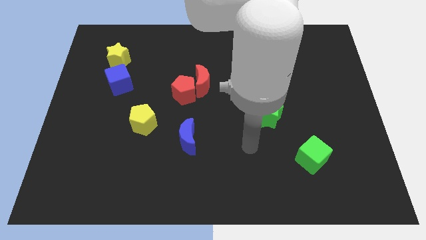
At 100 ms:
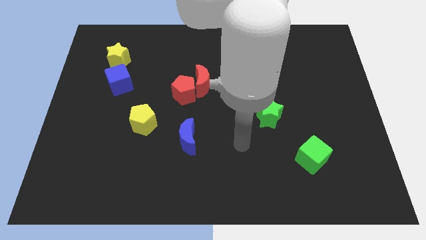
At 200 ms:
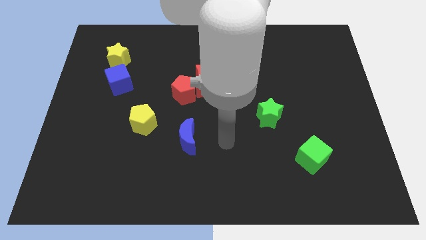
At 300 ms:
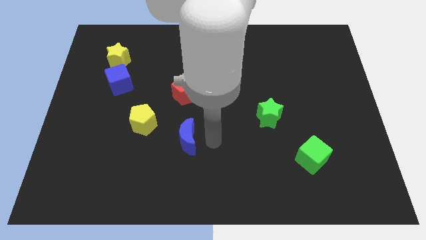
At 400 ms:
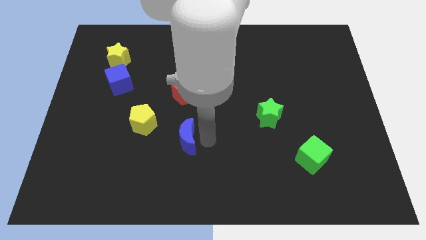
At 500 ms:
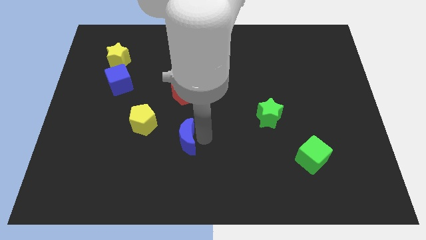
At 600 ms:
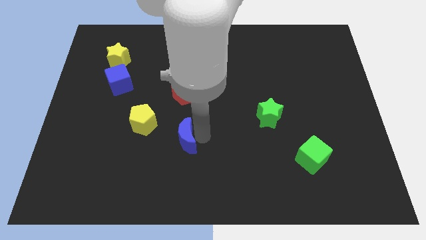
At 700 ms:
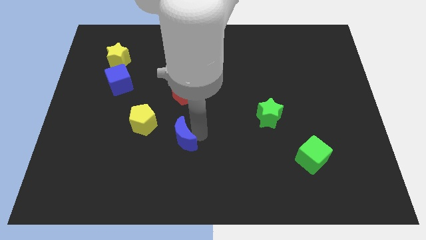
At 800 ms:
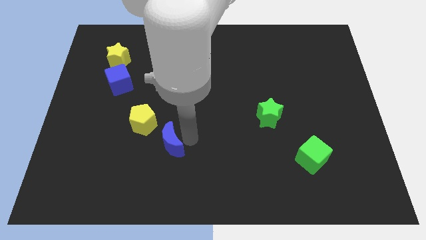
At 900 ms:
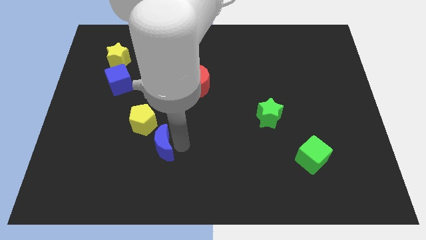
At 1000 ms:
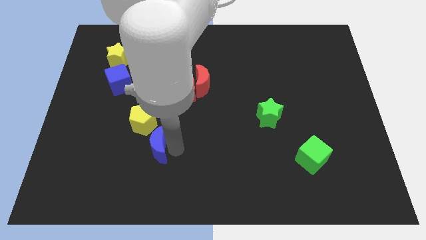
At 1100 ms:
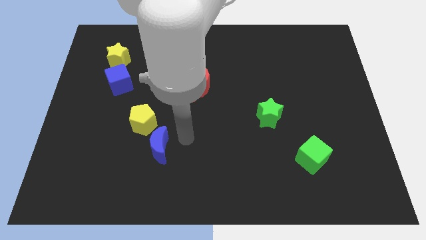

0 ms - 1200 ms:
slide blue crescent close to the yellow pentagon

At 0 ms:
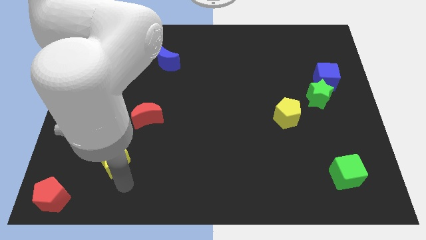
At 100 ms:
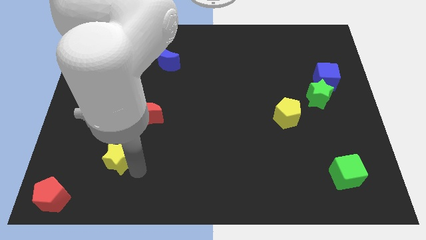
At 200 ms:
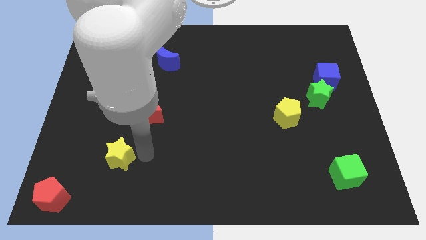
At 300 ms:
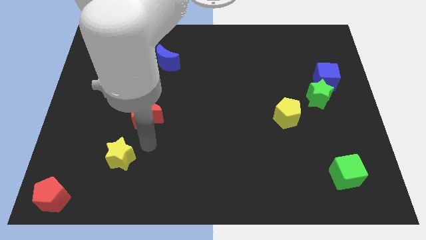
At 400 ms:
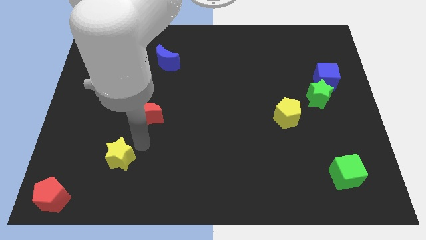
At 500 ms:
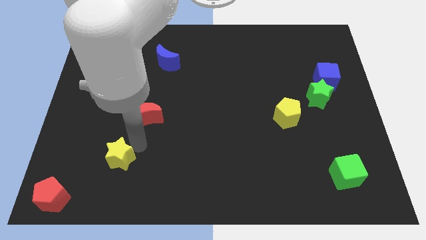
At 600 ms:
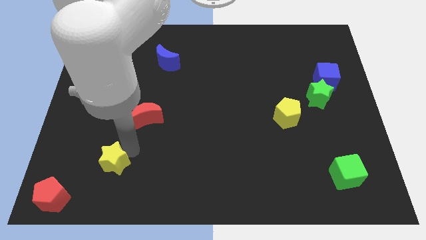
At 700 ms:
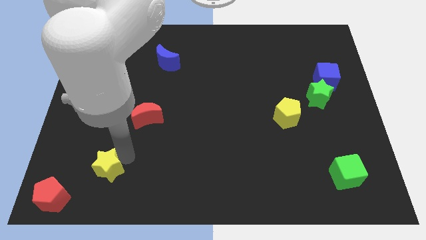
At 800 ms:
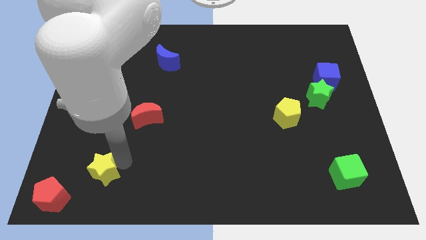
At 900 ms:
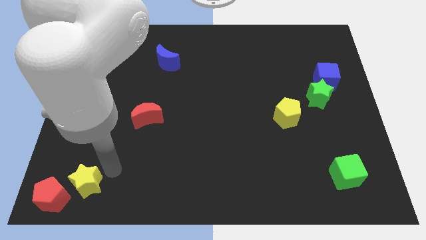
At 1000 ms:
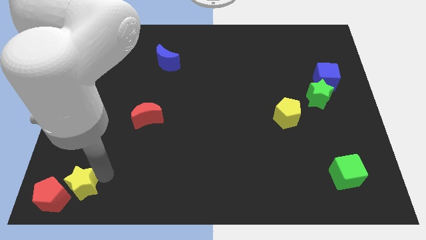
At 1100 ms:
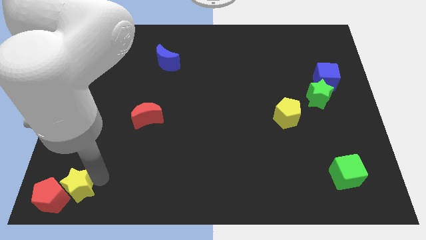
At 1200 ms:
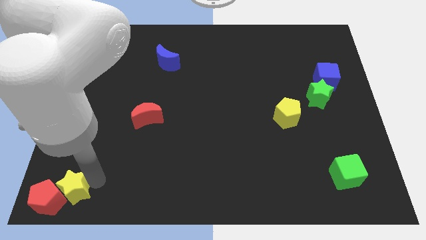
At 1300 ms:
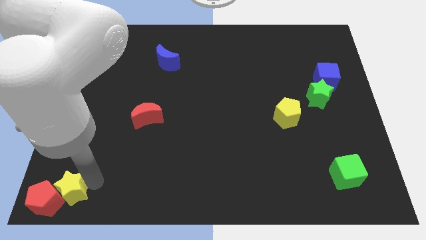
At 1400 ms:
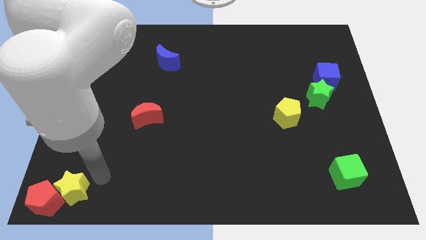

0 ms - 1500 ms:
push the yellow star into the red pentagon

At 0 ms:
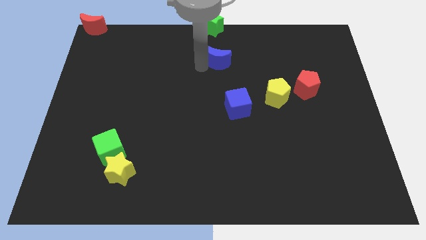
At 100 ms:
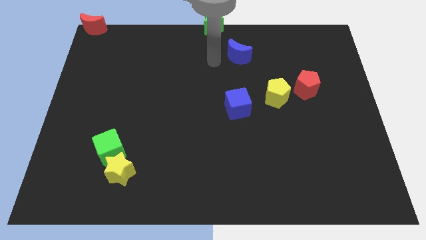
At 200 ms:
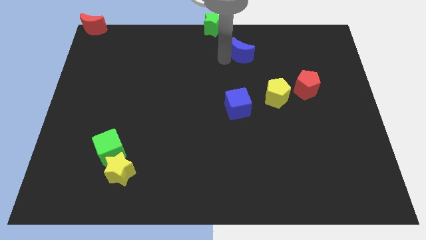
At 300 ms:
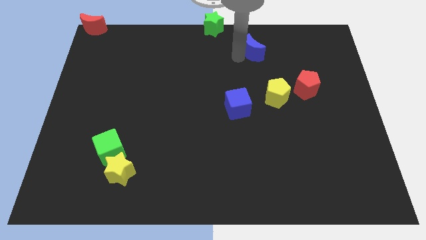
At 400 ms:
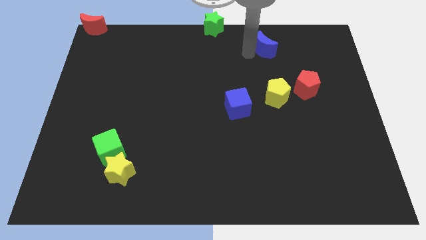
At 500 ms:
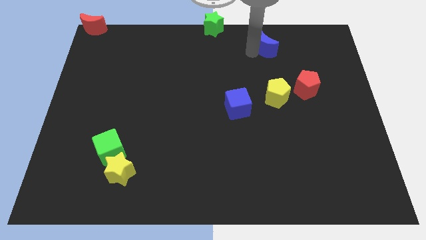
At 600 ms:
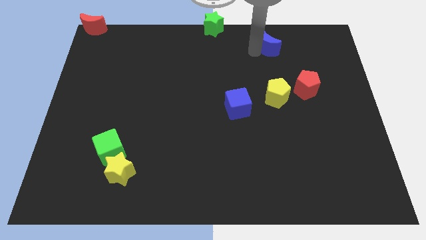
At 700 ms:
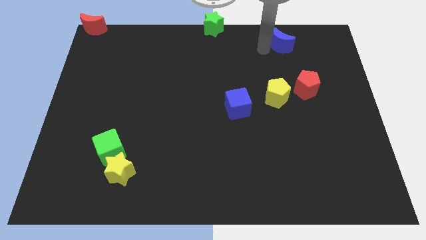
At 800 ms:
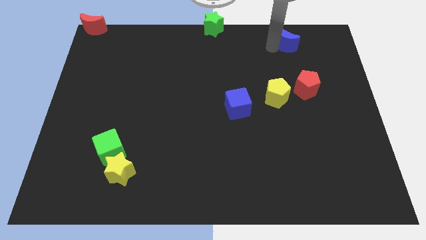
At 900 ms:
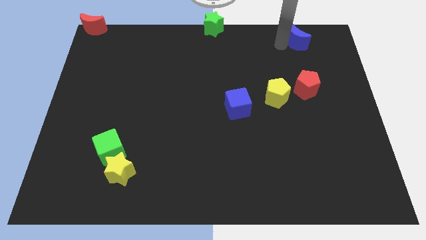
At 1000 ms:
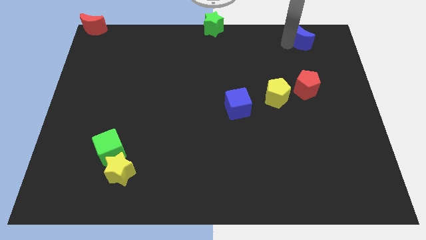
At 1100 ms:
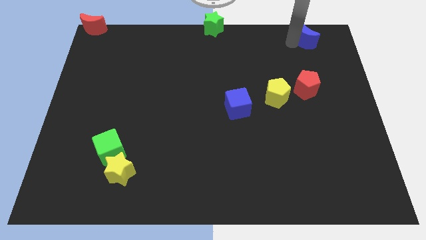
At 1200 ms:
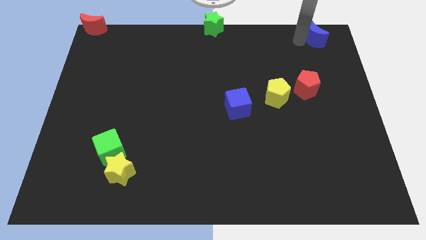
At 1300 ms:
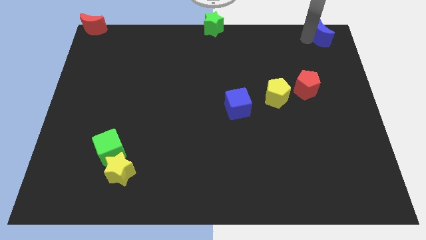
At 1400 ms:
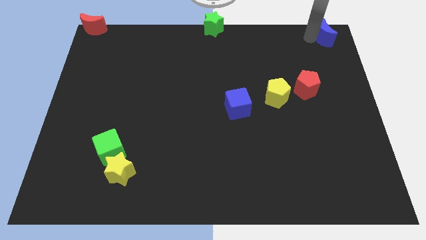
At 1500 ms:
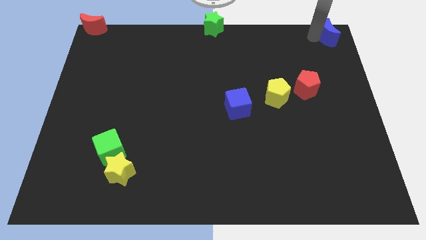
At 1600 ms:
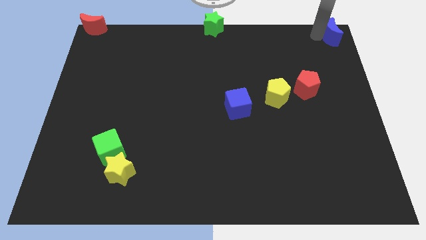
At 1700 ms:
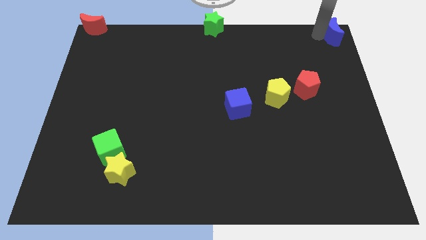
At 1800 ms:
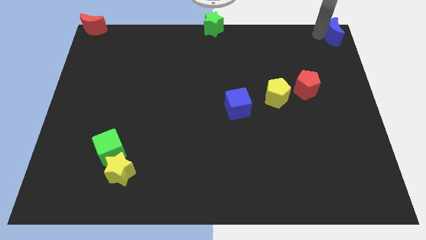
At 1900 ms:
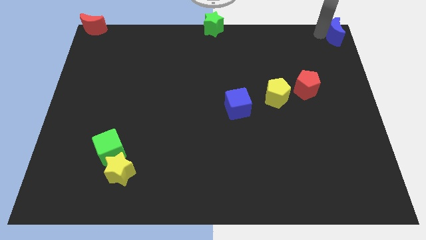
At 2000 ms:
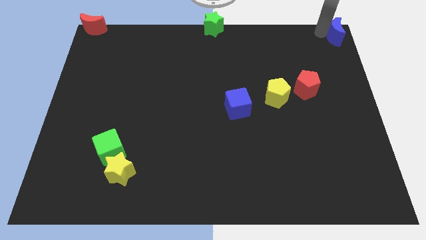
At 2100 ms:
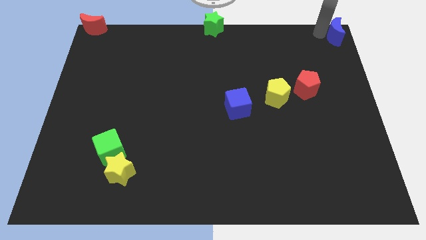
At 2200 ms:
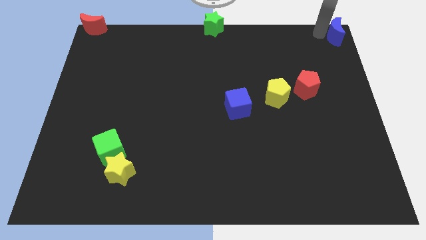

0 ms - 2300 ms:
push the blue moon to the top right corner of the board

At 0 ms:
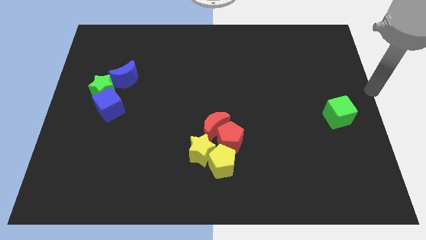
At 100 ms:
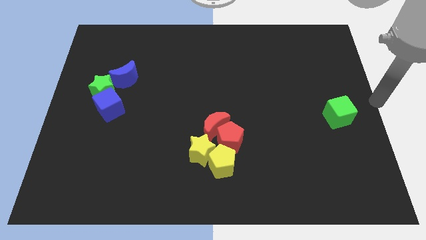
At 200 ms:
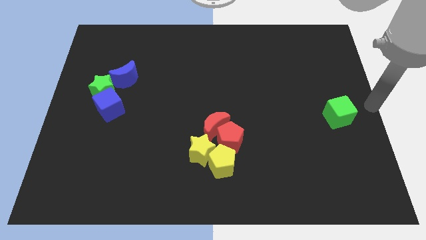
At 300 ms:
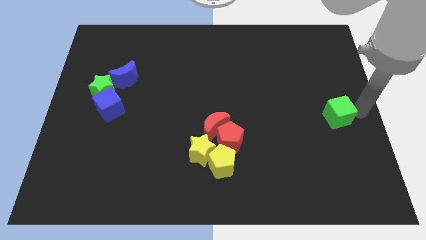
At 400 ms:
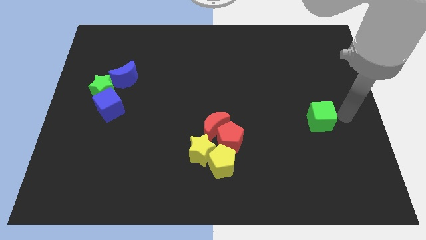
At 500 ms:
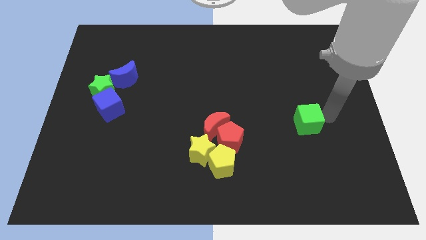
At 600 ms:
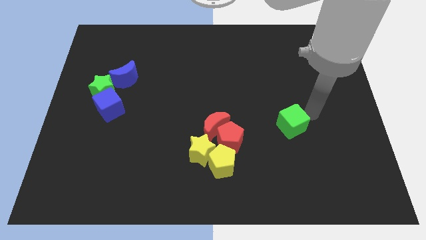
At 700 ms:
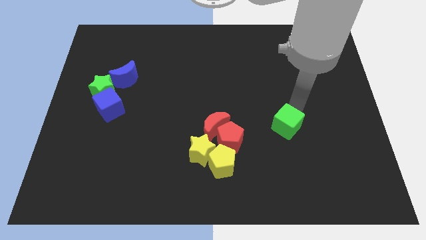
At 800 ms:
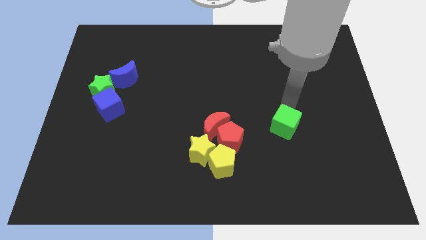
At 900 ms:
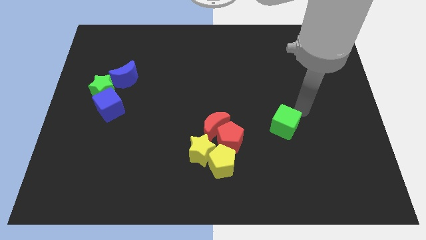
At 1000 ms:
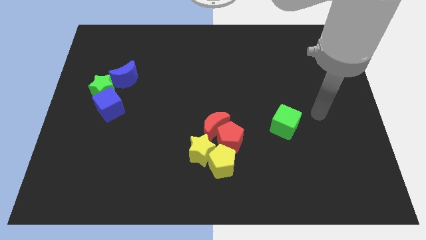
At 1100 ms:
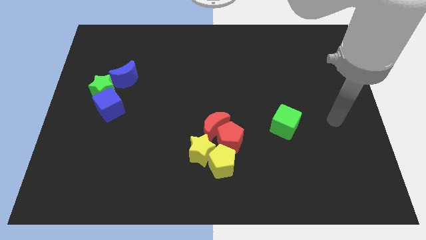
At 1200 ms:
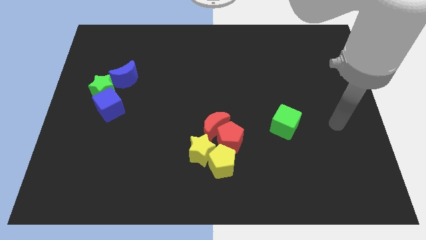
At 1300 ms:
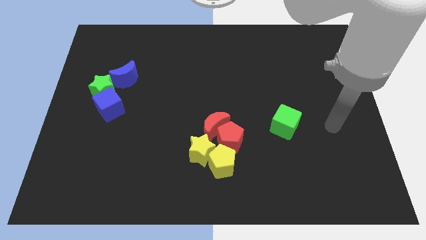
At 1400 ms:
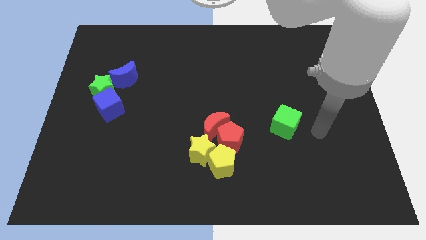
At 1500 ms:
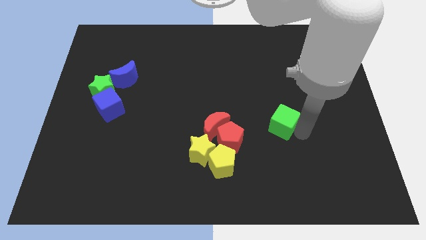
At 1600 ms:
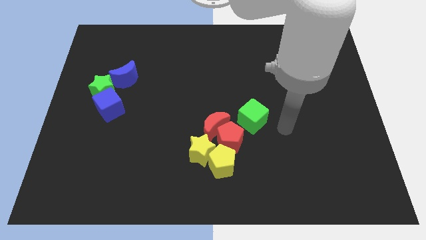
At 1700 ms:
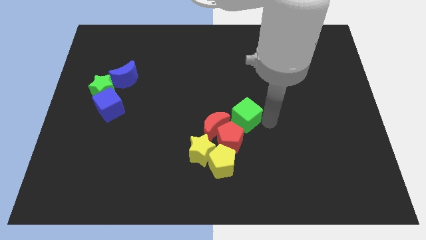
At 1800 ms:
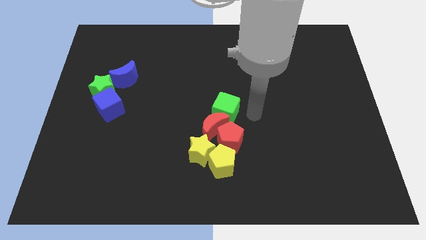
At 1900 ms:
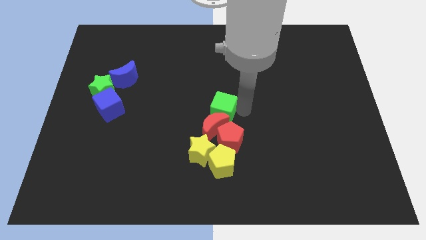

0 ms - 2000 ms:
move the green cube to the center of the board

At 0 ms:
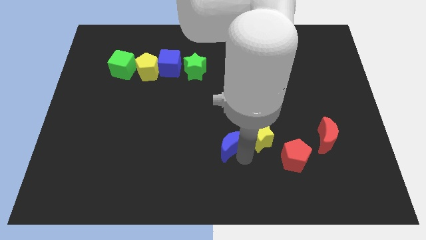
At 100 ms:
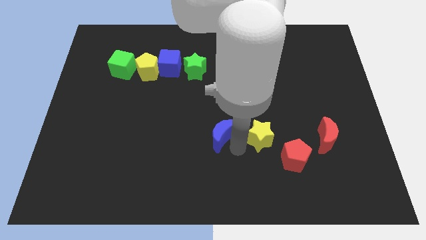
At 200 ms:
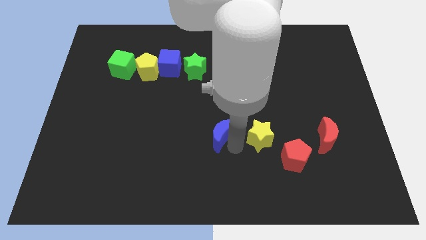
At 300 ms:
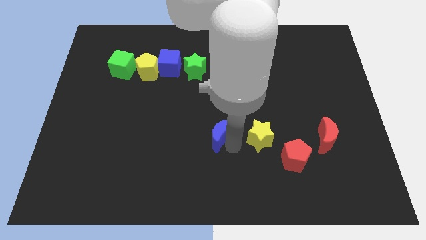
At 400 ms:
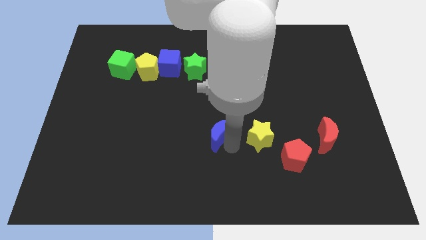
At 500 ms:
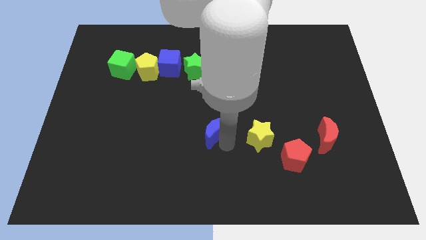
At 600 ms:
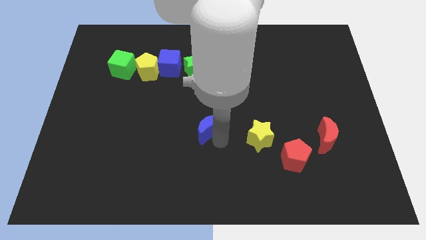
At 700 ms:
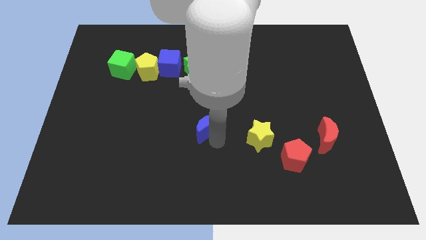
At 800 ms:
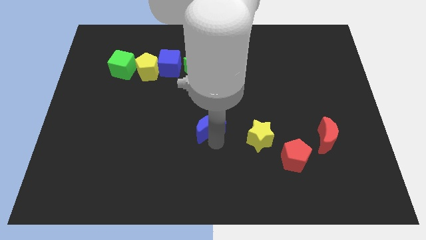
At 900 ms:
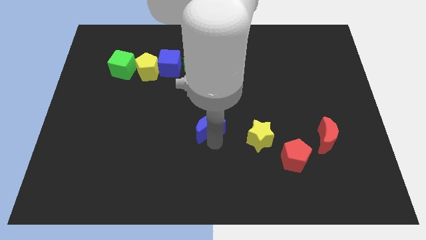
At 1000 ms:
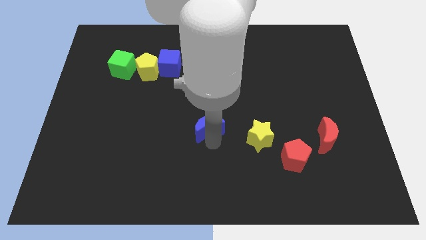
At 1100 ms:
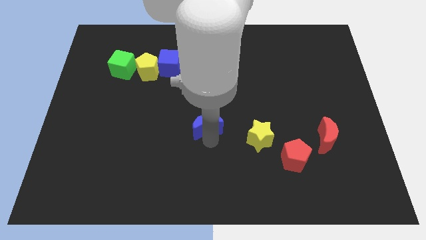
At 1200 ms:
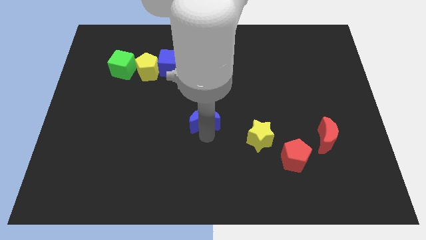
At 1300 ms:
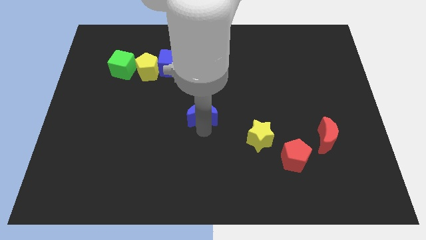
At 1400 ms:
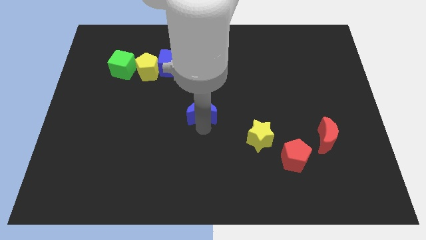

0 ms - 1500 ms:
slide the blue moon to the center

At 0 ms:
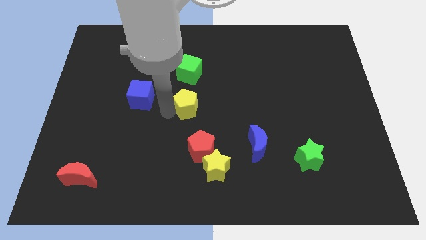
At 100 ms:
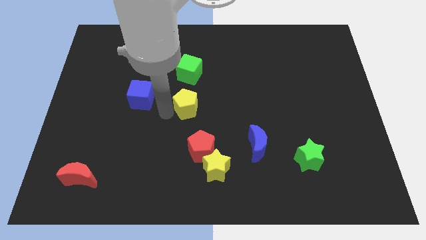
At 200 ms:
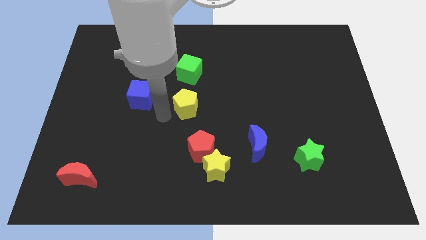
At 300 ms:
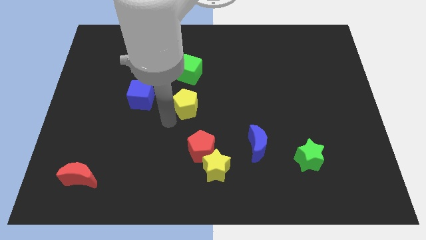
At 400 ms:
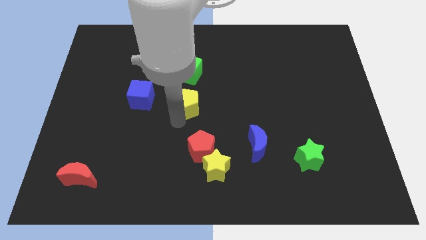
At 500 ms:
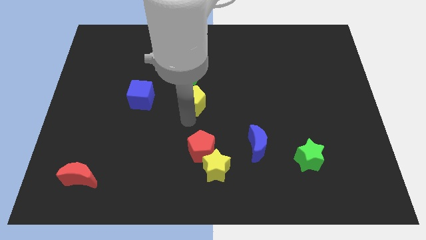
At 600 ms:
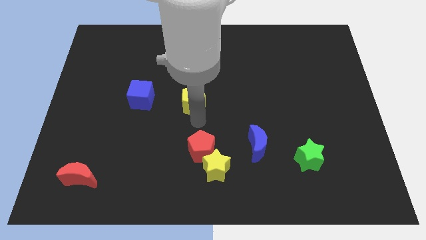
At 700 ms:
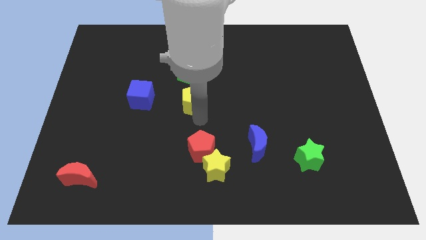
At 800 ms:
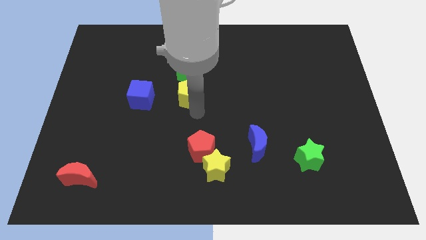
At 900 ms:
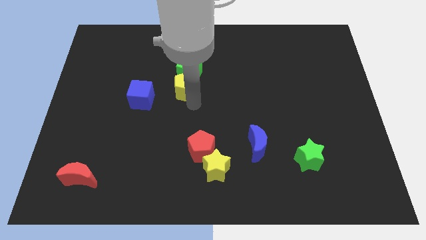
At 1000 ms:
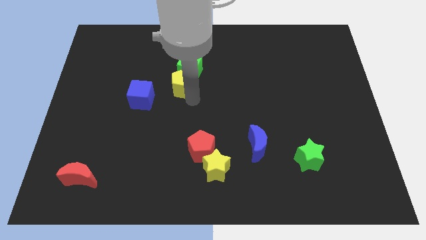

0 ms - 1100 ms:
move yellow pentagon into green cube
